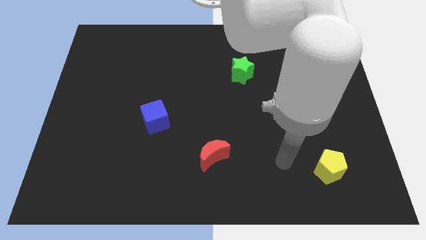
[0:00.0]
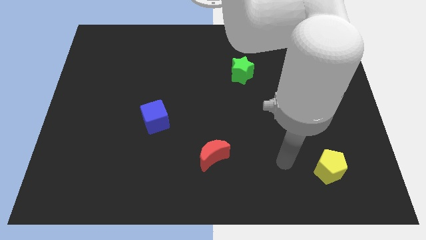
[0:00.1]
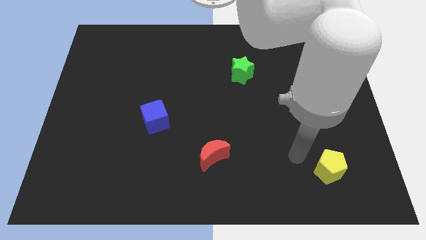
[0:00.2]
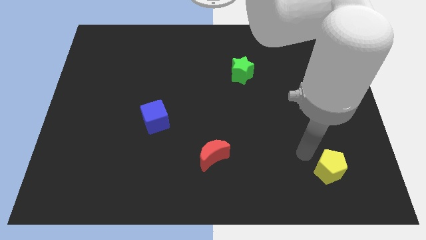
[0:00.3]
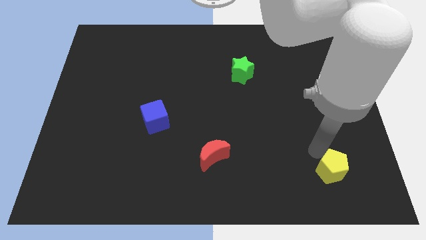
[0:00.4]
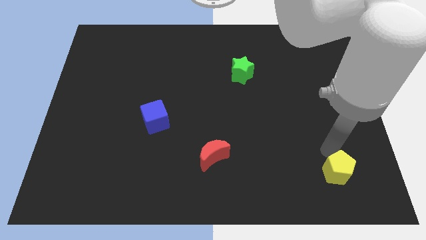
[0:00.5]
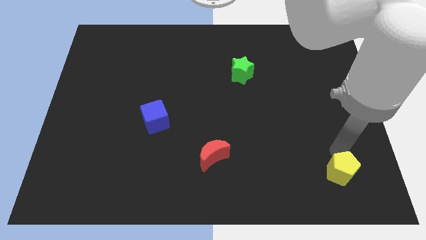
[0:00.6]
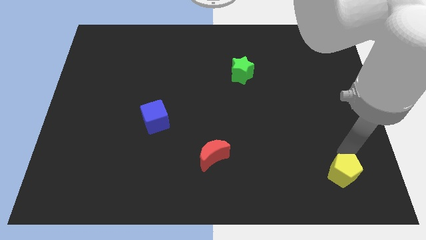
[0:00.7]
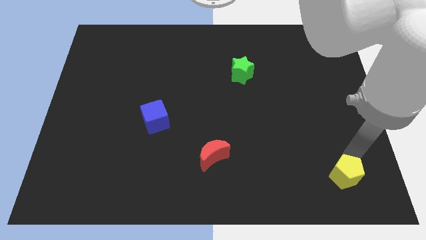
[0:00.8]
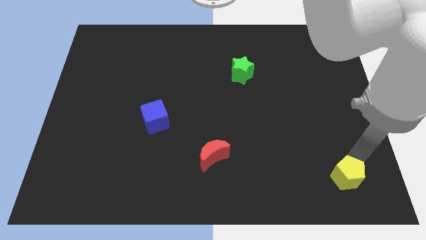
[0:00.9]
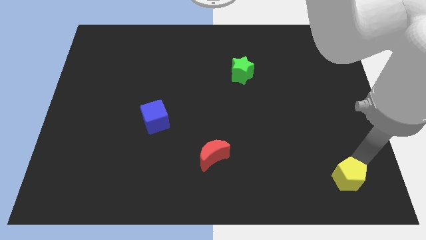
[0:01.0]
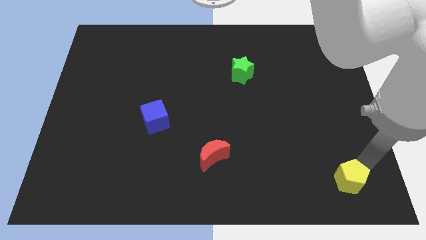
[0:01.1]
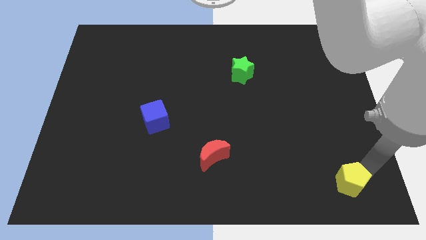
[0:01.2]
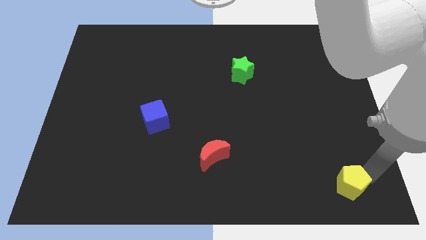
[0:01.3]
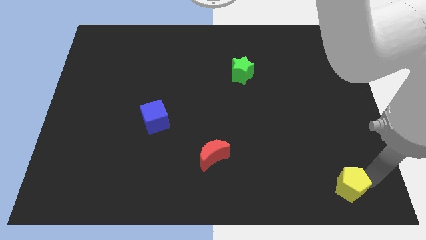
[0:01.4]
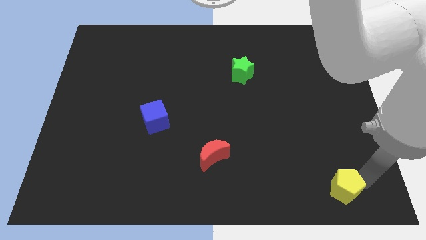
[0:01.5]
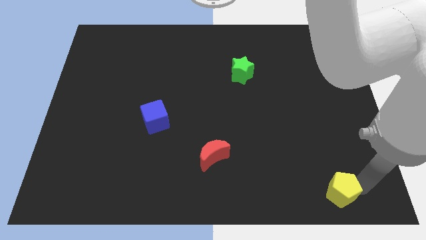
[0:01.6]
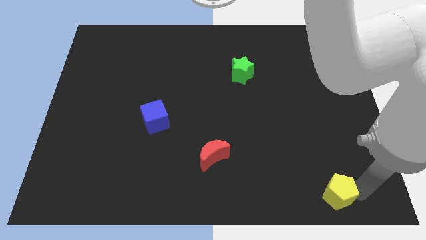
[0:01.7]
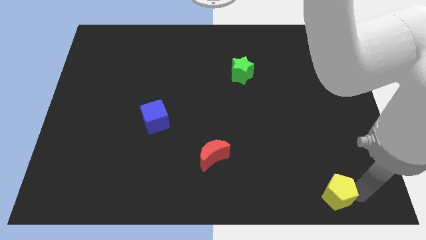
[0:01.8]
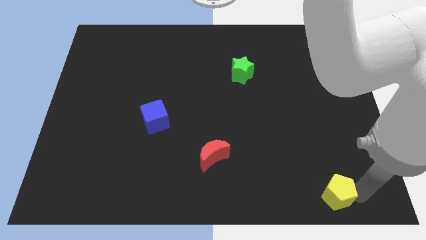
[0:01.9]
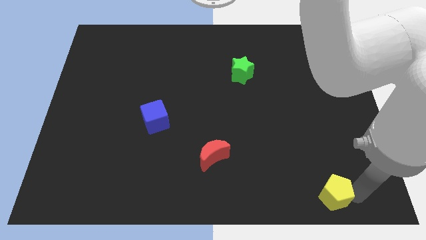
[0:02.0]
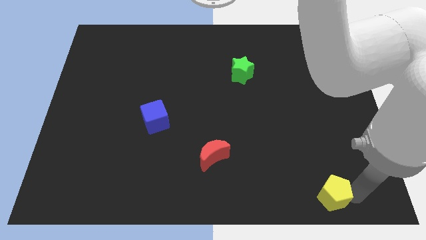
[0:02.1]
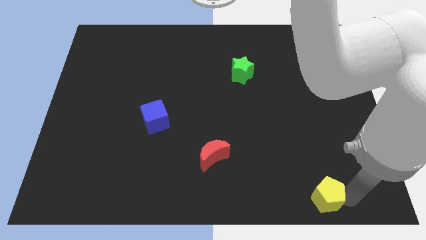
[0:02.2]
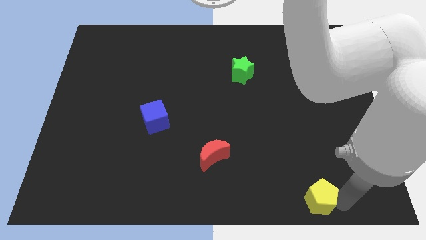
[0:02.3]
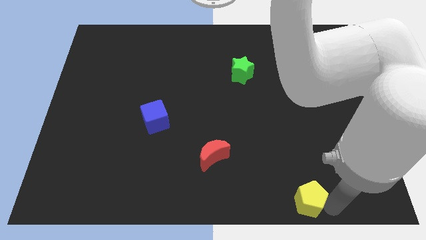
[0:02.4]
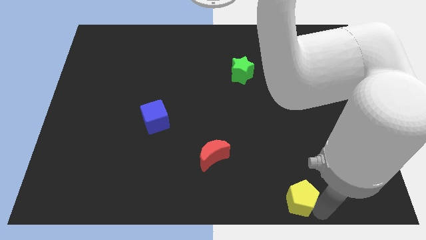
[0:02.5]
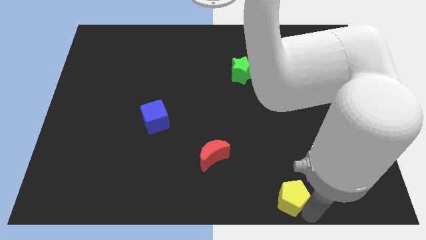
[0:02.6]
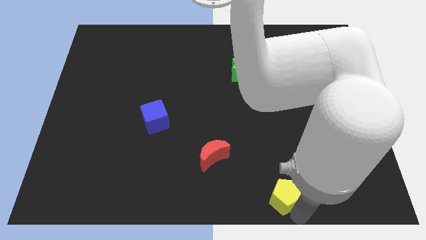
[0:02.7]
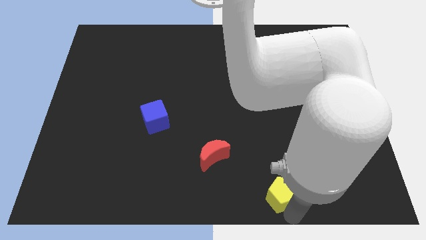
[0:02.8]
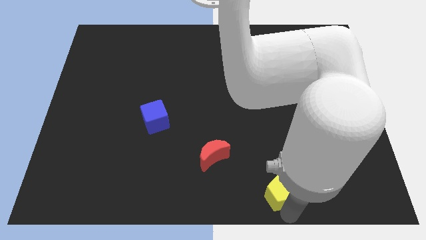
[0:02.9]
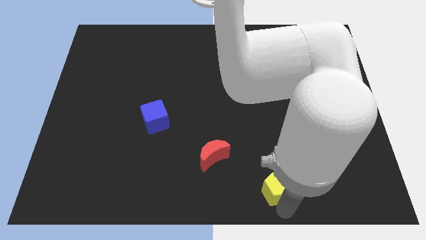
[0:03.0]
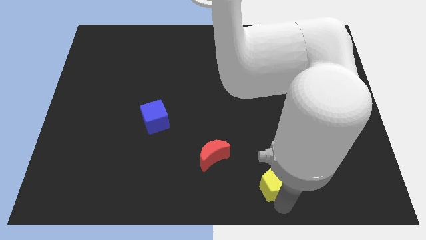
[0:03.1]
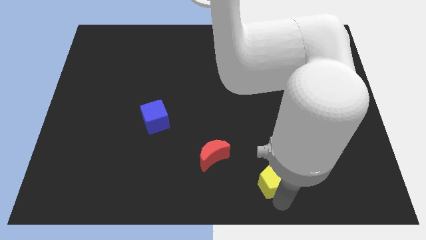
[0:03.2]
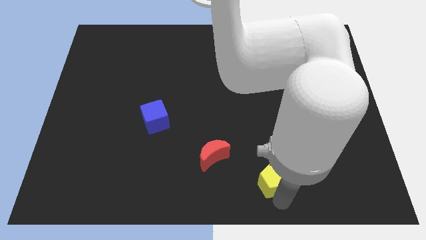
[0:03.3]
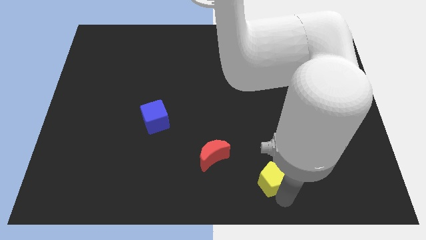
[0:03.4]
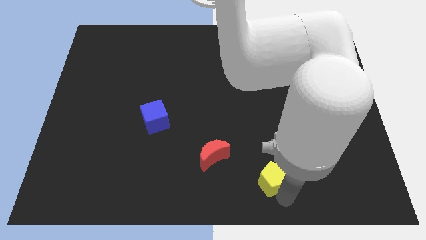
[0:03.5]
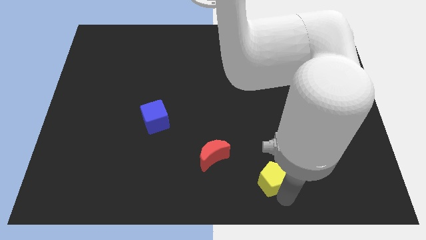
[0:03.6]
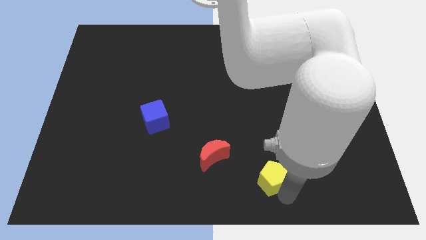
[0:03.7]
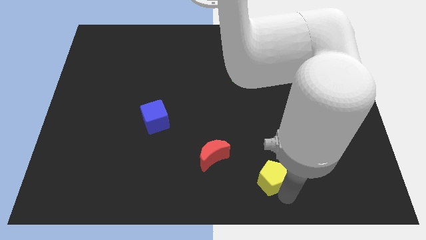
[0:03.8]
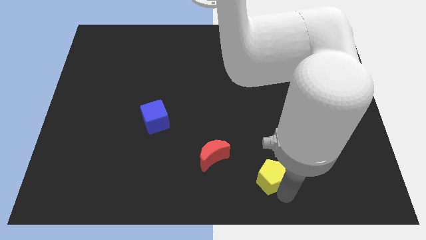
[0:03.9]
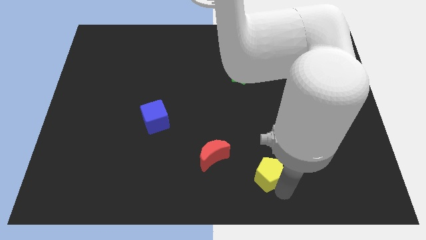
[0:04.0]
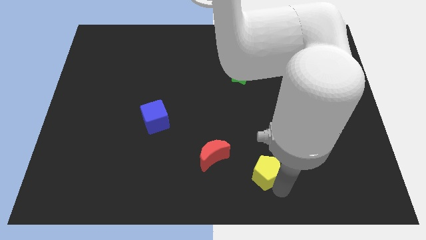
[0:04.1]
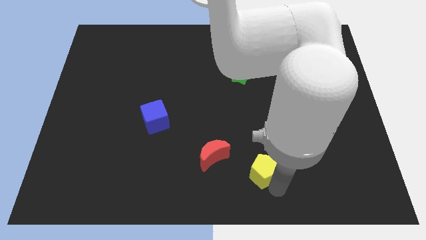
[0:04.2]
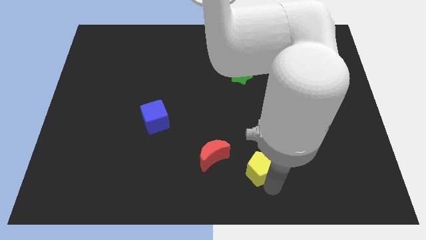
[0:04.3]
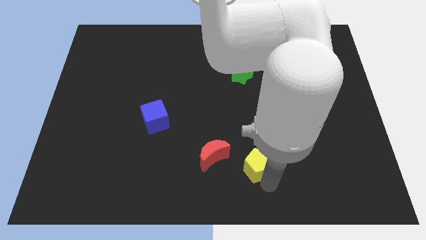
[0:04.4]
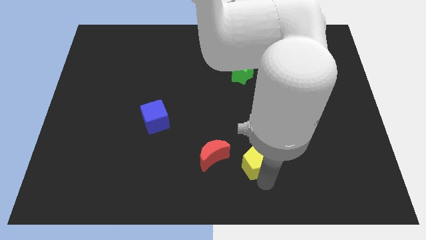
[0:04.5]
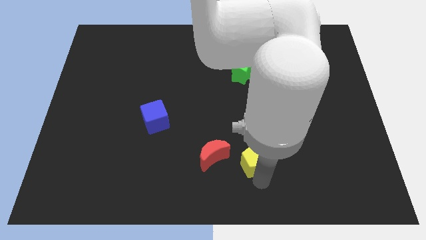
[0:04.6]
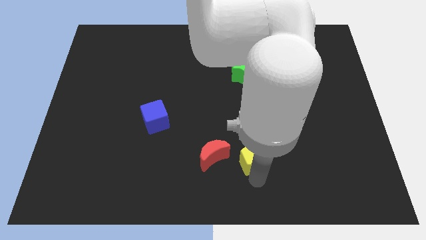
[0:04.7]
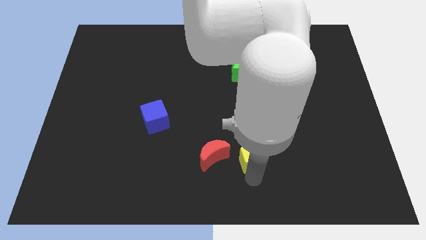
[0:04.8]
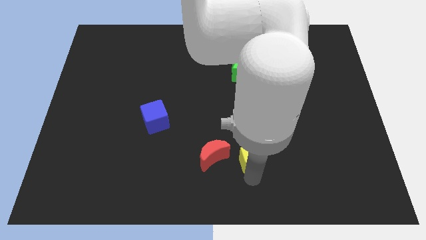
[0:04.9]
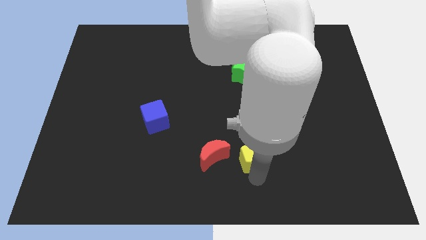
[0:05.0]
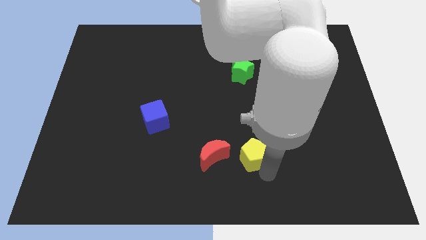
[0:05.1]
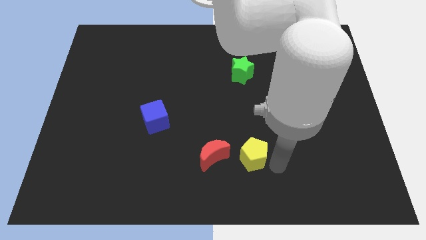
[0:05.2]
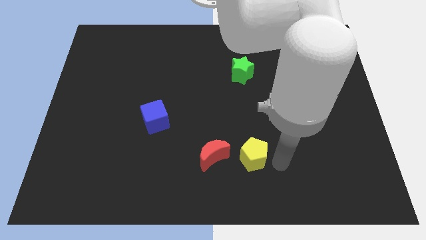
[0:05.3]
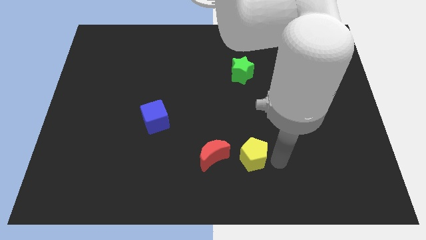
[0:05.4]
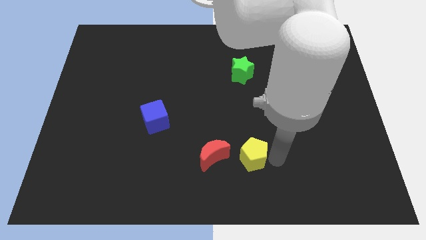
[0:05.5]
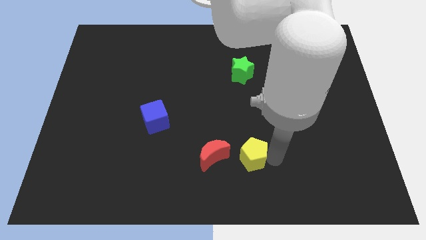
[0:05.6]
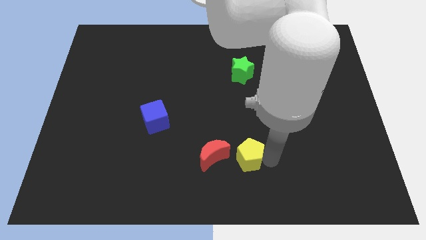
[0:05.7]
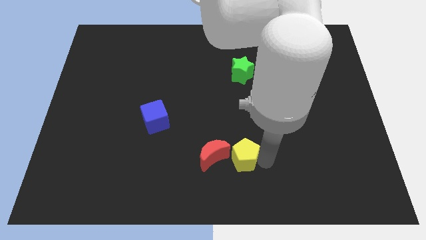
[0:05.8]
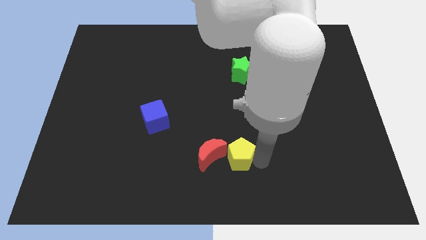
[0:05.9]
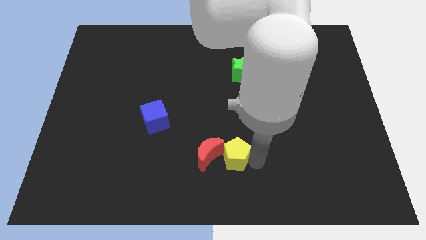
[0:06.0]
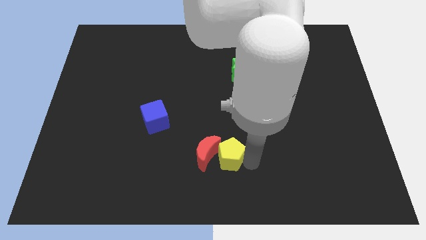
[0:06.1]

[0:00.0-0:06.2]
move the yellow pentagon towards the red moon

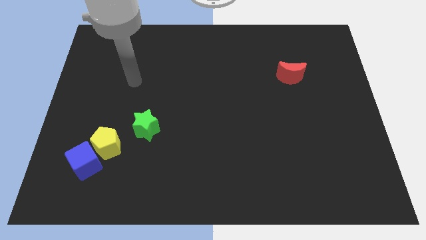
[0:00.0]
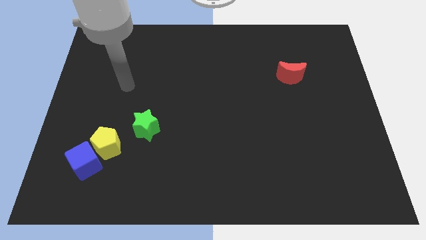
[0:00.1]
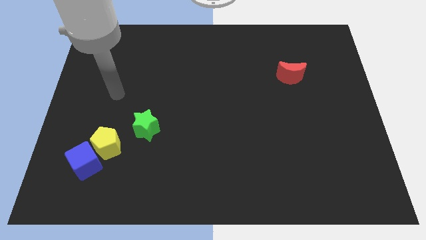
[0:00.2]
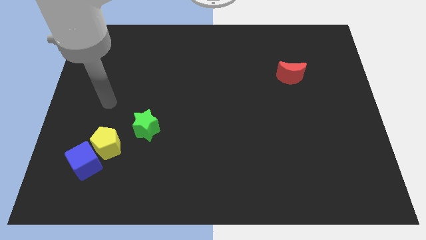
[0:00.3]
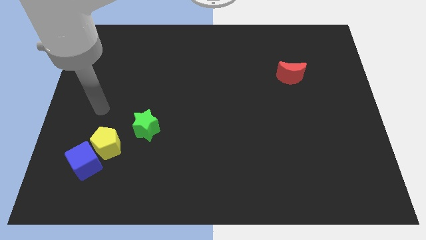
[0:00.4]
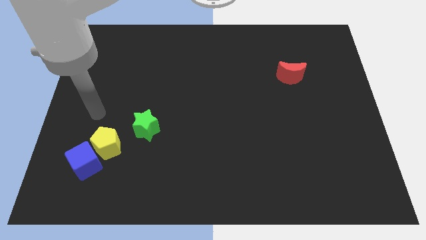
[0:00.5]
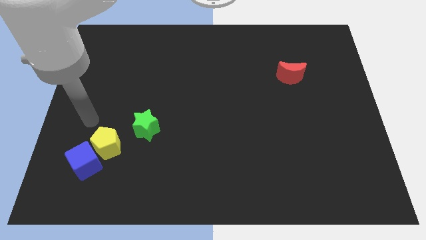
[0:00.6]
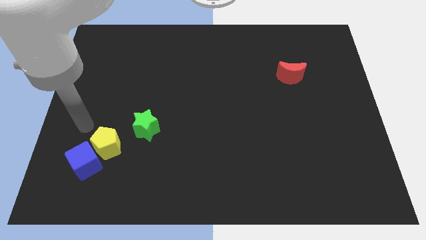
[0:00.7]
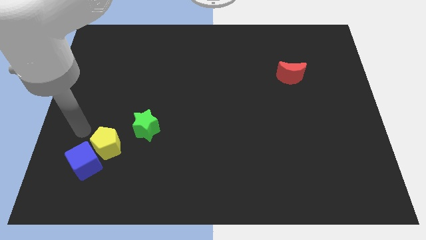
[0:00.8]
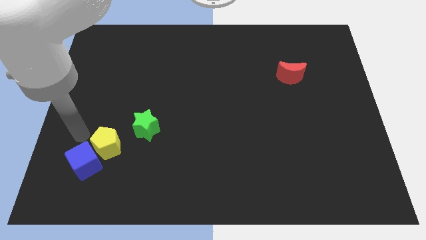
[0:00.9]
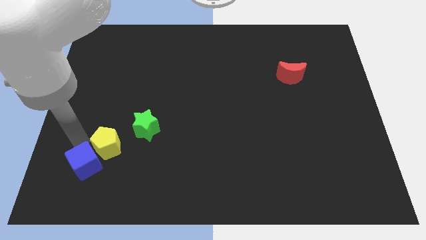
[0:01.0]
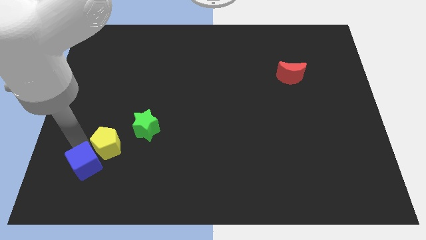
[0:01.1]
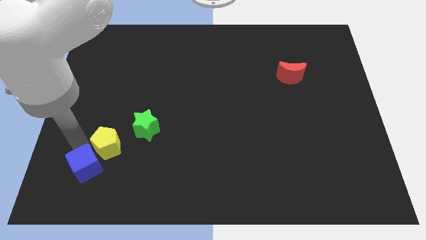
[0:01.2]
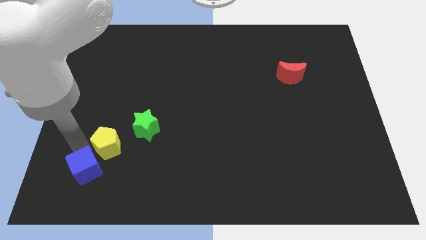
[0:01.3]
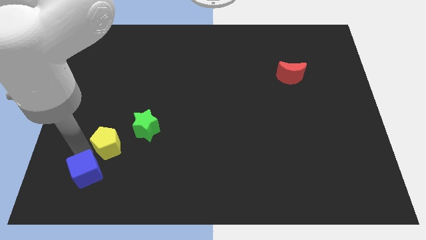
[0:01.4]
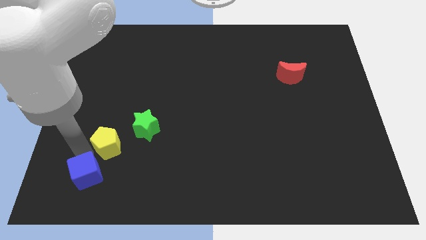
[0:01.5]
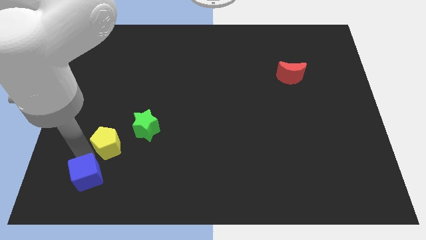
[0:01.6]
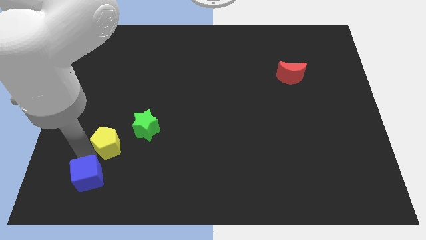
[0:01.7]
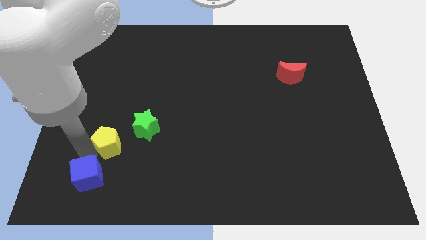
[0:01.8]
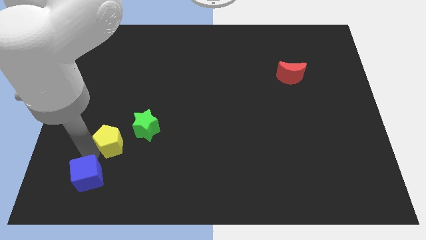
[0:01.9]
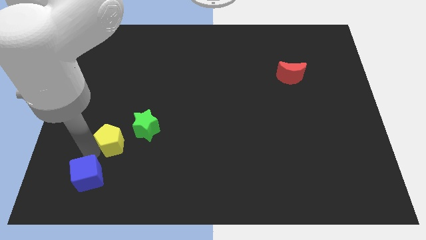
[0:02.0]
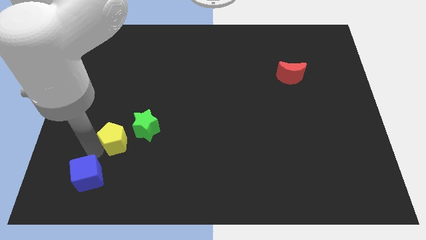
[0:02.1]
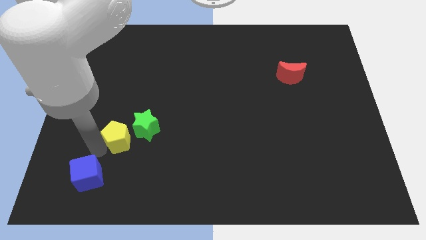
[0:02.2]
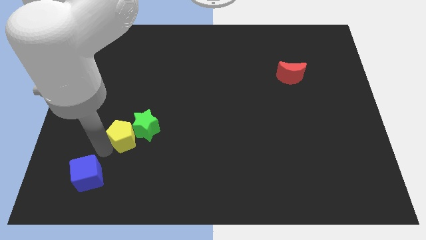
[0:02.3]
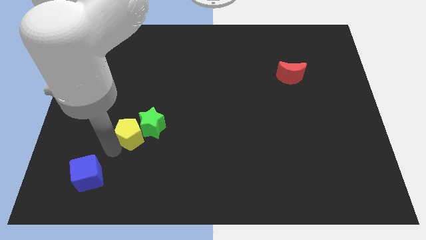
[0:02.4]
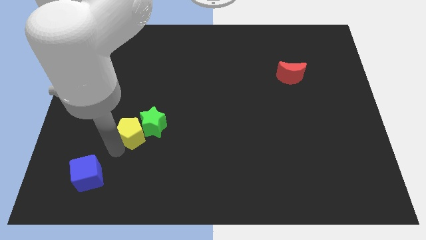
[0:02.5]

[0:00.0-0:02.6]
push the yellow block to the green block

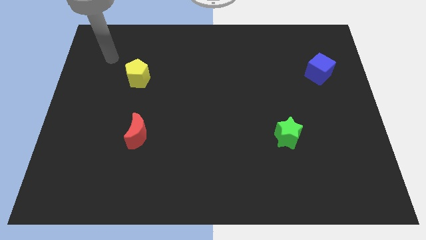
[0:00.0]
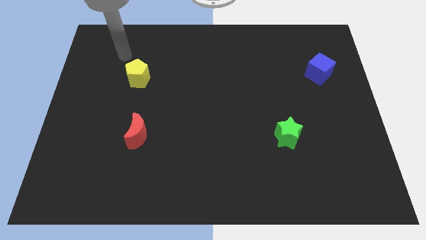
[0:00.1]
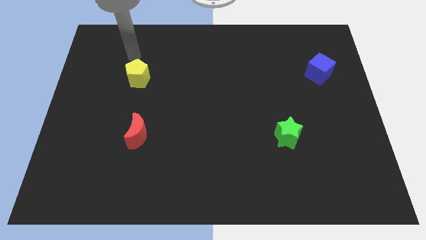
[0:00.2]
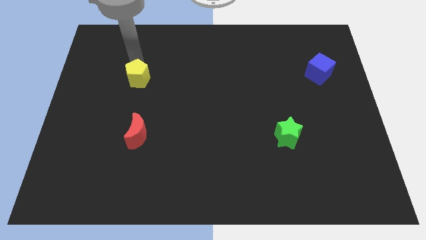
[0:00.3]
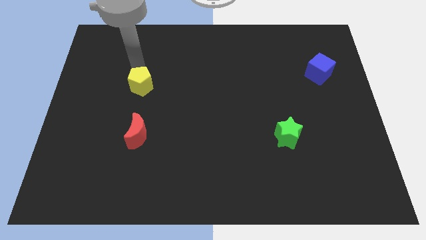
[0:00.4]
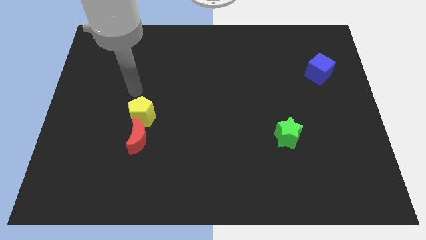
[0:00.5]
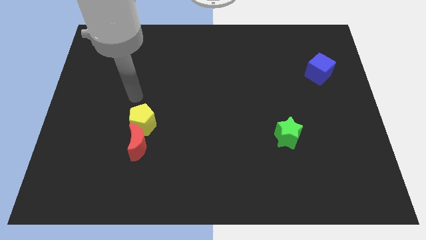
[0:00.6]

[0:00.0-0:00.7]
move the pentagon towards the red moon
